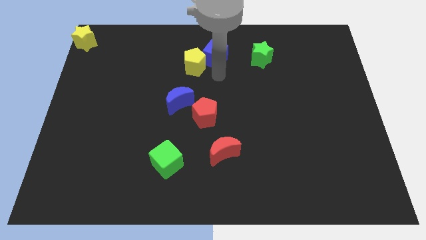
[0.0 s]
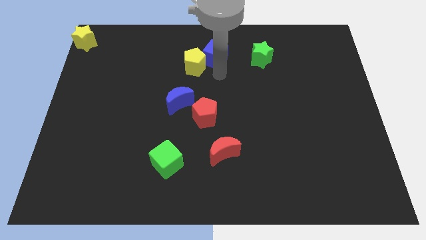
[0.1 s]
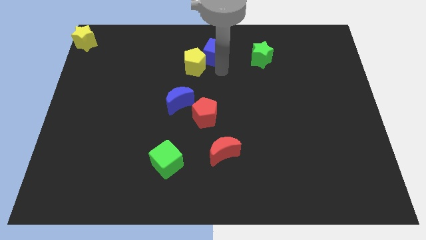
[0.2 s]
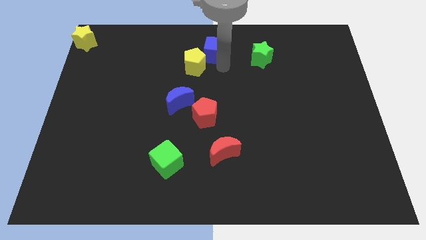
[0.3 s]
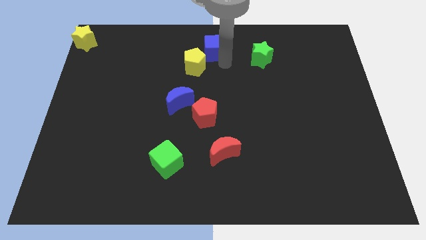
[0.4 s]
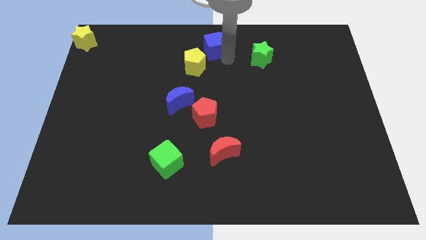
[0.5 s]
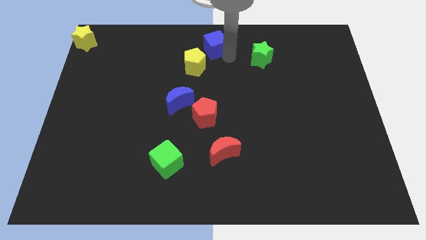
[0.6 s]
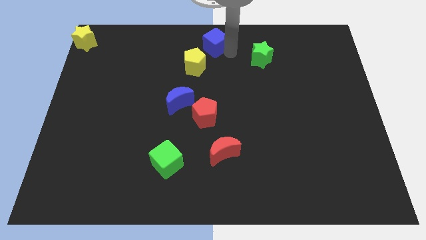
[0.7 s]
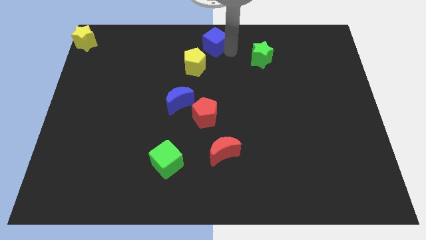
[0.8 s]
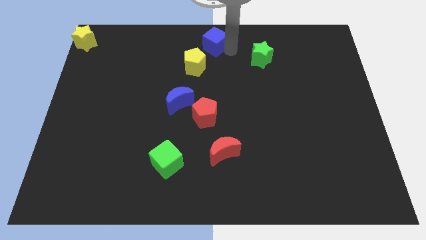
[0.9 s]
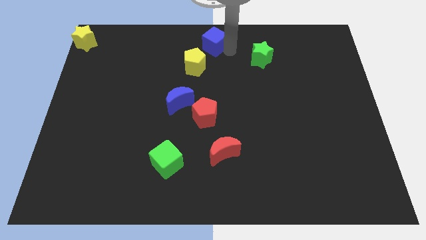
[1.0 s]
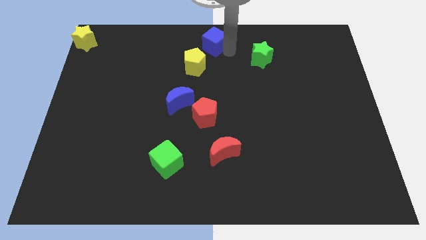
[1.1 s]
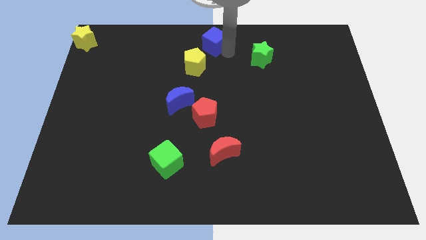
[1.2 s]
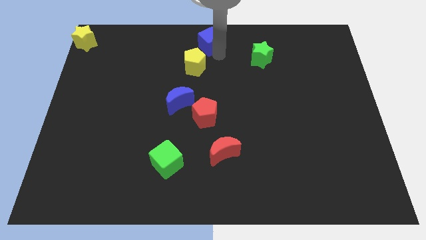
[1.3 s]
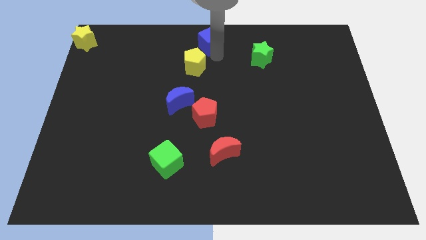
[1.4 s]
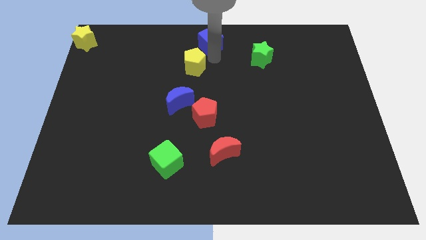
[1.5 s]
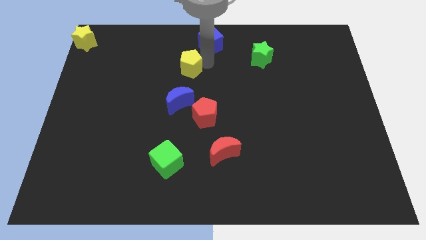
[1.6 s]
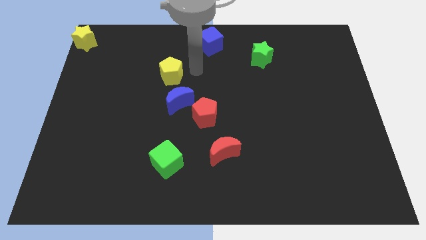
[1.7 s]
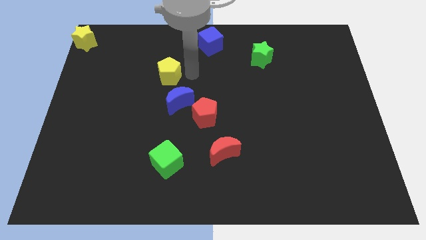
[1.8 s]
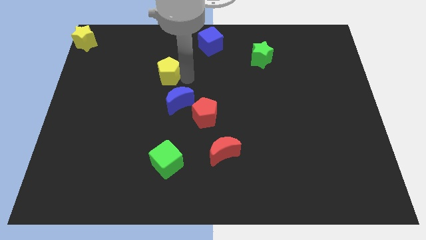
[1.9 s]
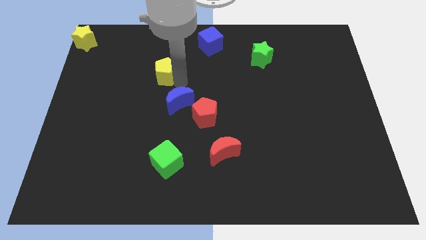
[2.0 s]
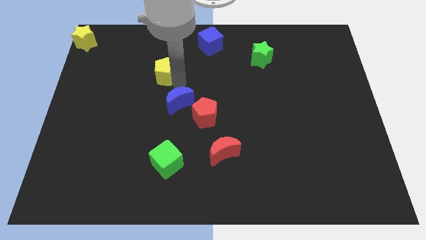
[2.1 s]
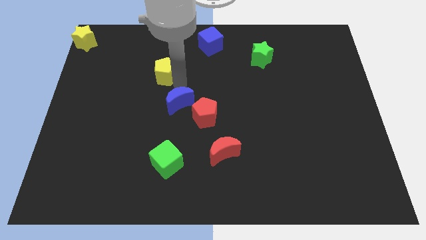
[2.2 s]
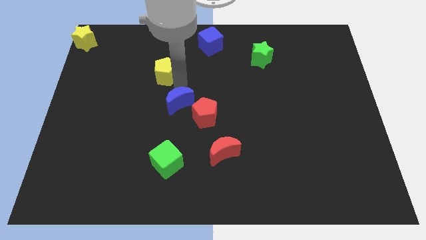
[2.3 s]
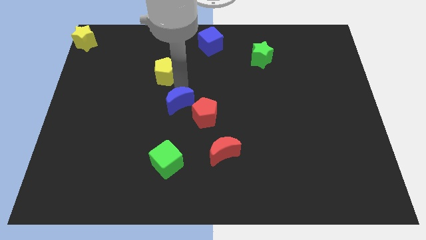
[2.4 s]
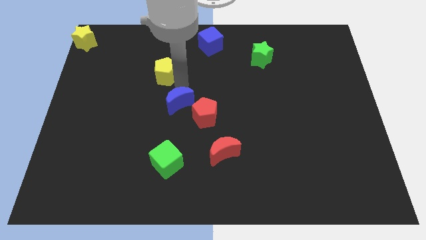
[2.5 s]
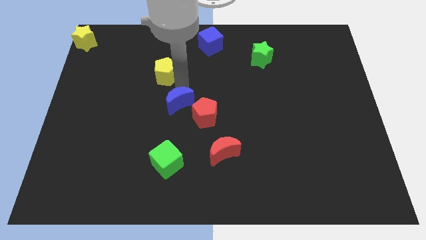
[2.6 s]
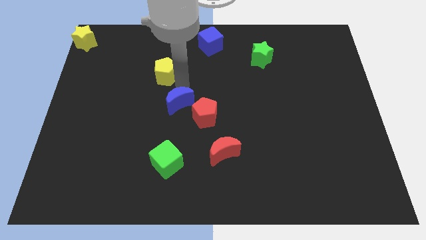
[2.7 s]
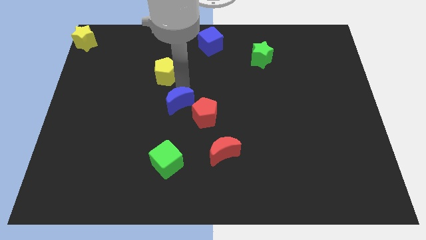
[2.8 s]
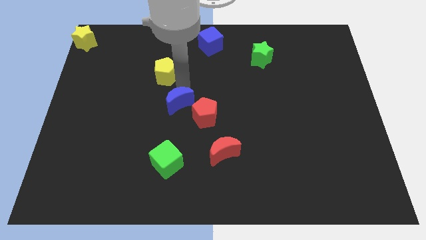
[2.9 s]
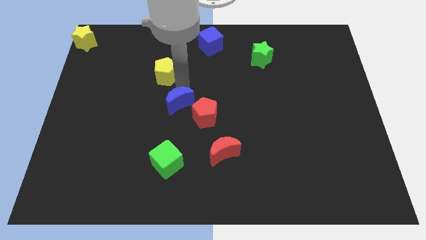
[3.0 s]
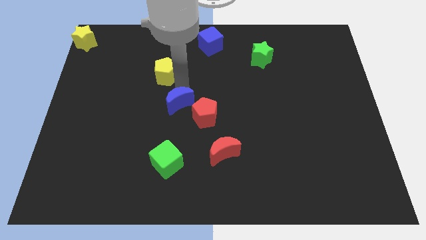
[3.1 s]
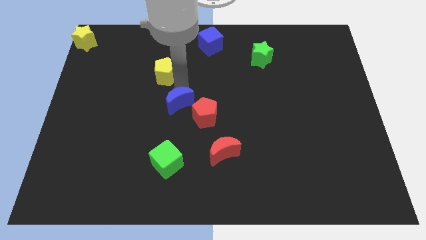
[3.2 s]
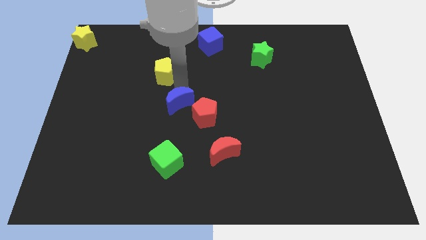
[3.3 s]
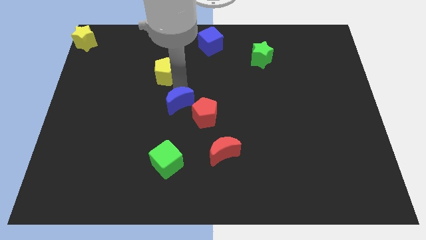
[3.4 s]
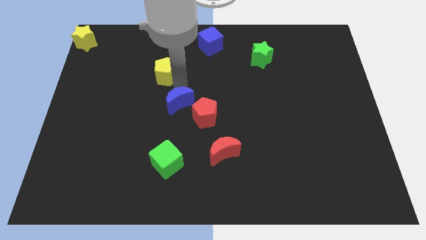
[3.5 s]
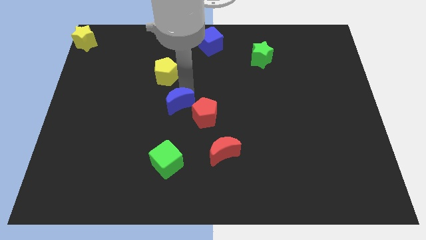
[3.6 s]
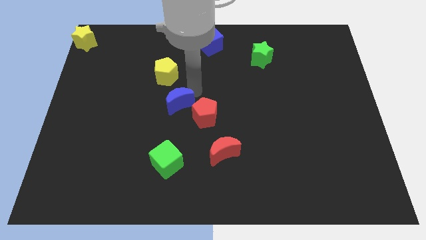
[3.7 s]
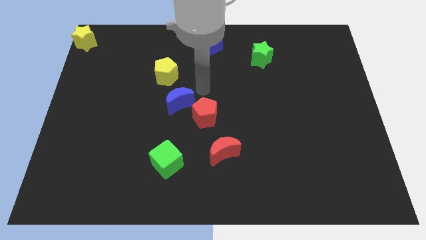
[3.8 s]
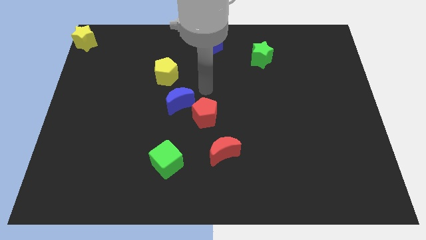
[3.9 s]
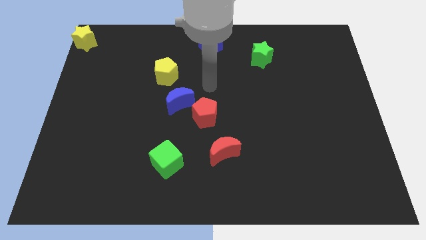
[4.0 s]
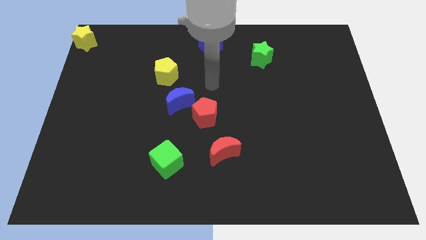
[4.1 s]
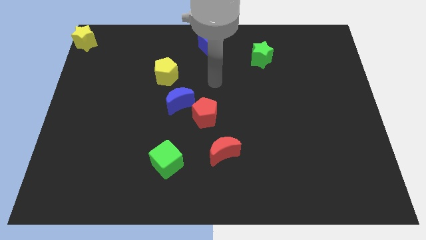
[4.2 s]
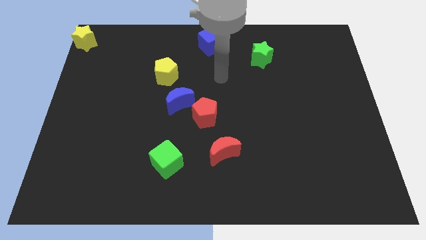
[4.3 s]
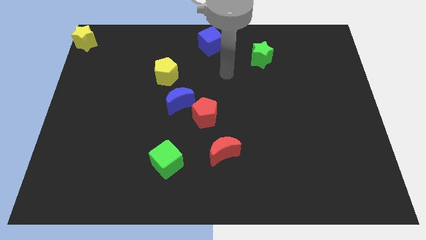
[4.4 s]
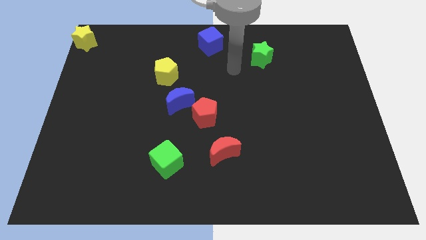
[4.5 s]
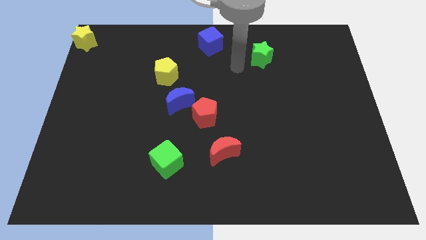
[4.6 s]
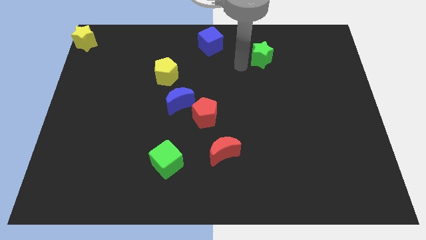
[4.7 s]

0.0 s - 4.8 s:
push the yellow pentagon to the top left side of the blue crescent

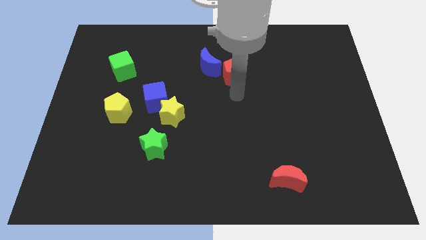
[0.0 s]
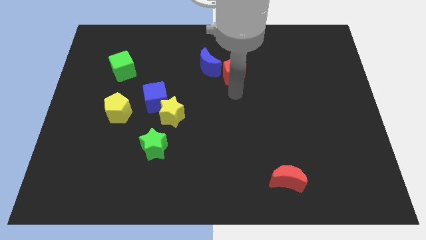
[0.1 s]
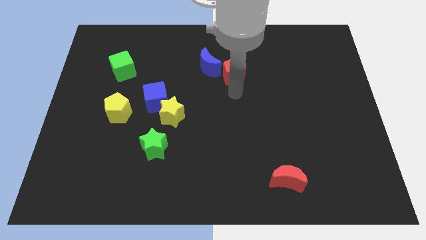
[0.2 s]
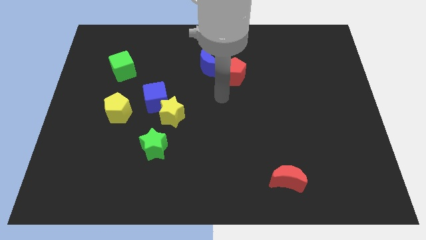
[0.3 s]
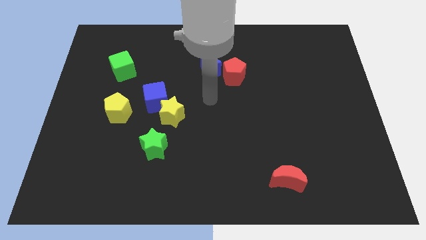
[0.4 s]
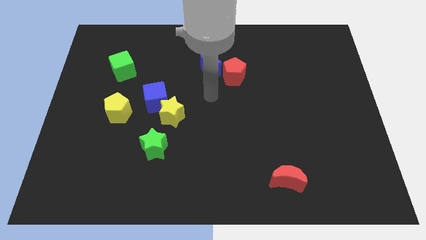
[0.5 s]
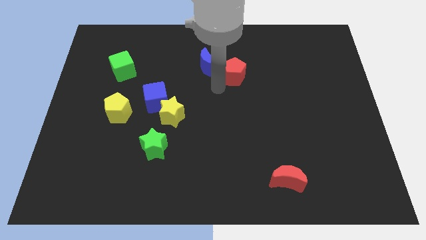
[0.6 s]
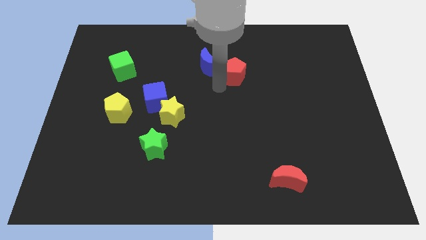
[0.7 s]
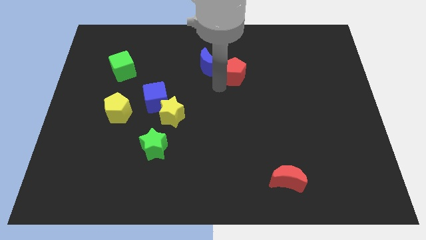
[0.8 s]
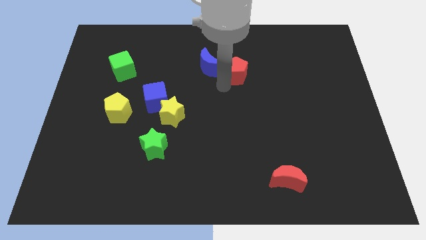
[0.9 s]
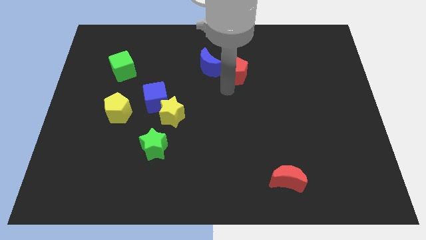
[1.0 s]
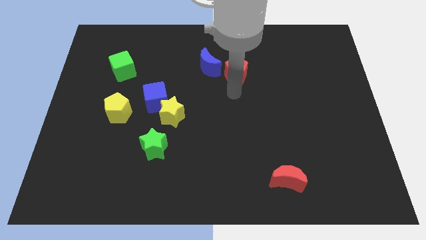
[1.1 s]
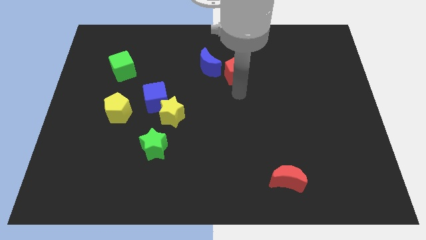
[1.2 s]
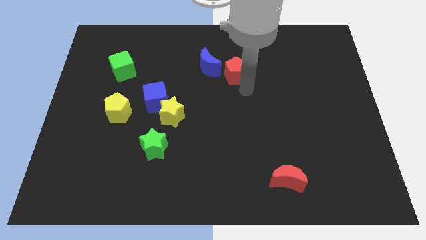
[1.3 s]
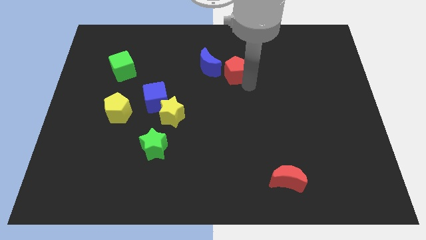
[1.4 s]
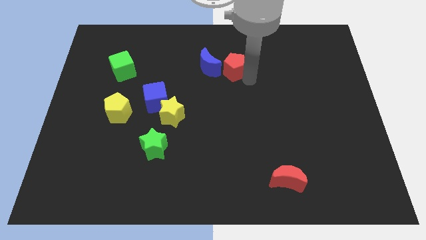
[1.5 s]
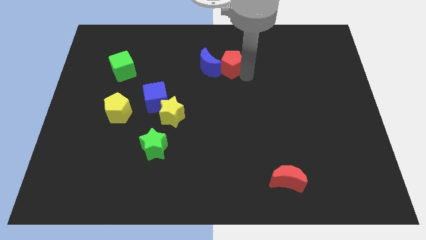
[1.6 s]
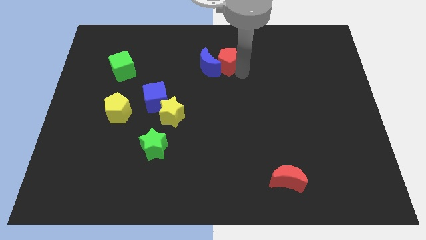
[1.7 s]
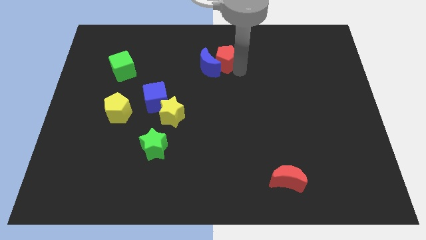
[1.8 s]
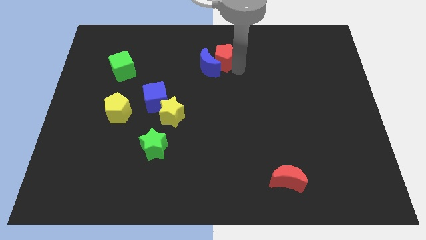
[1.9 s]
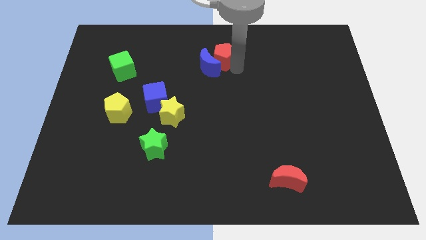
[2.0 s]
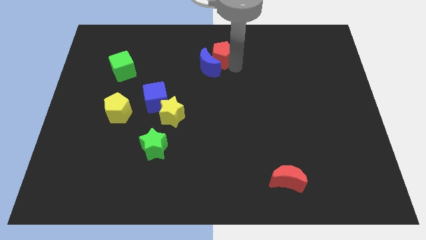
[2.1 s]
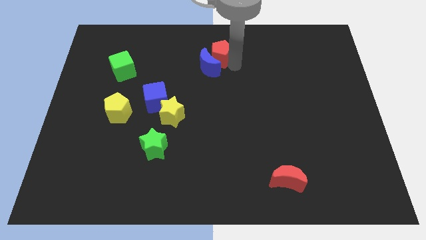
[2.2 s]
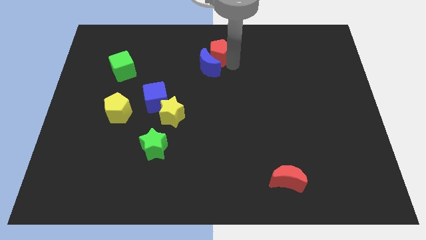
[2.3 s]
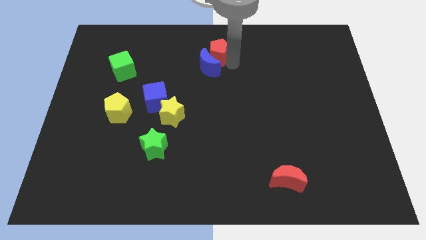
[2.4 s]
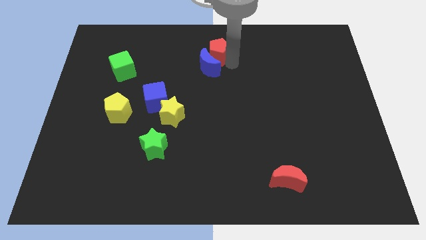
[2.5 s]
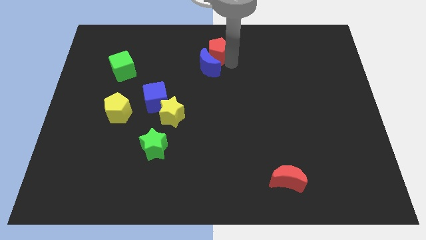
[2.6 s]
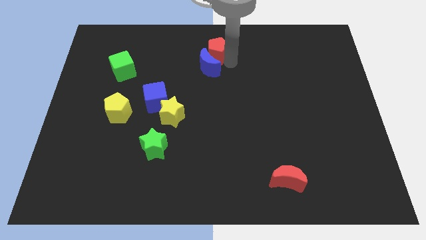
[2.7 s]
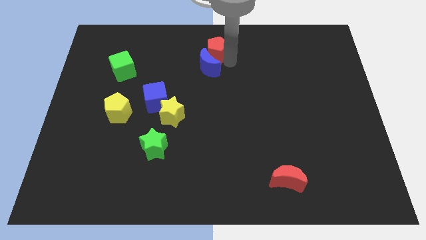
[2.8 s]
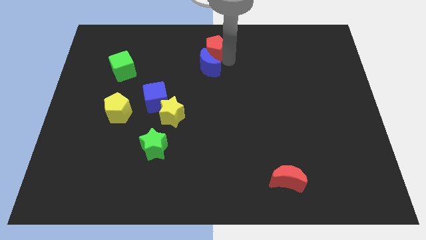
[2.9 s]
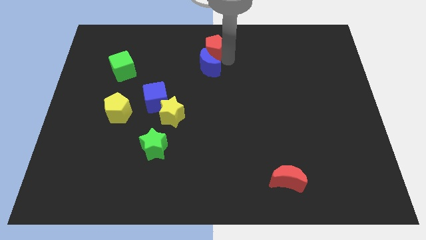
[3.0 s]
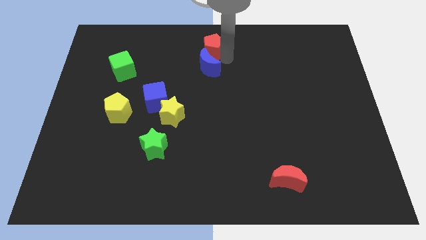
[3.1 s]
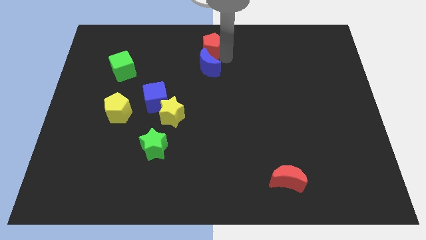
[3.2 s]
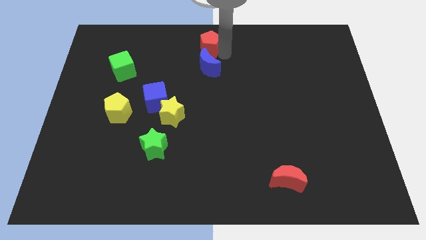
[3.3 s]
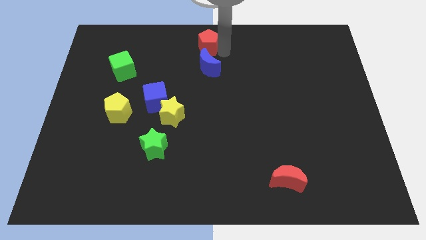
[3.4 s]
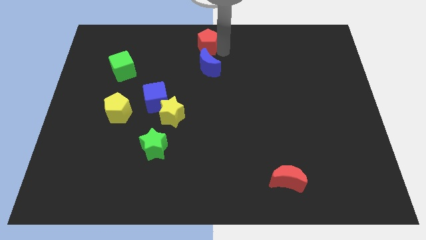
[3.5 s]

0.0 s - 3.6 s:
place the red pentagon above the blue moon

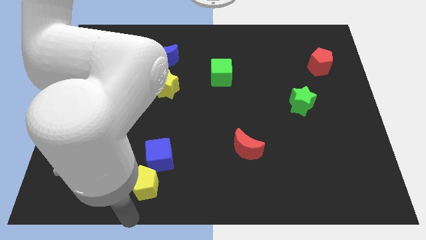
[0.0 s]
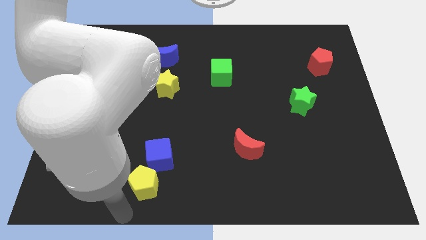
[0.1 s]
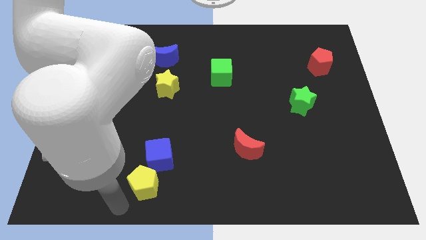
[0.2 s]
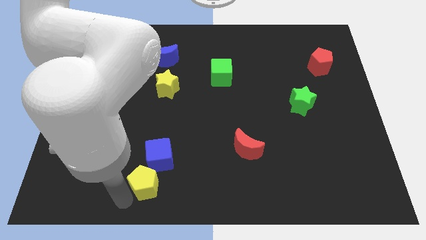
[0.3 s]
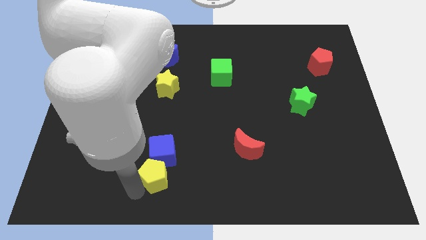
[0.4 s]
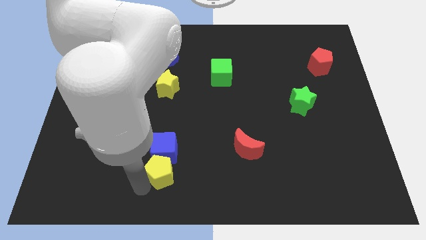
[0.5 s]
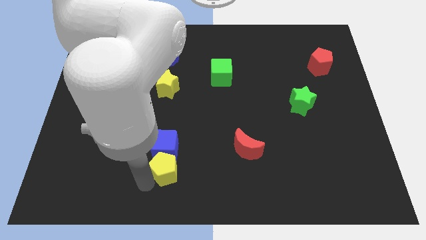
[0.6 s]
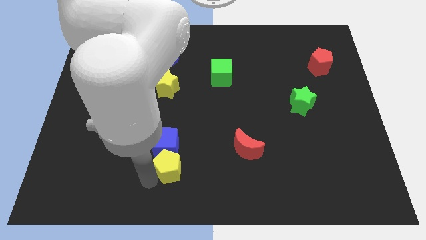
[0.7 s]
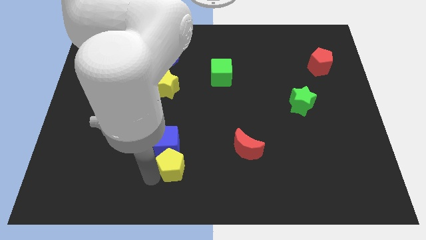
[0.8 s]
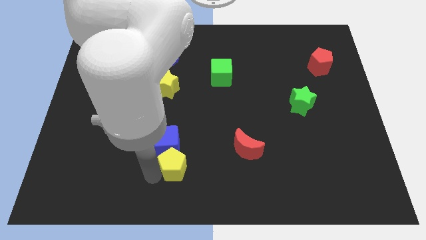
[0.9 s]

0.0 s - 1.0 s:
push the yellow pentagon into blue cube
